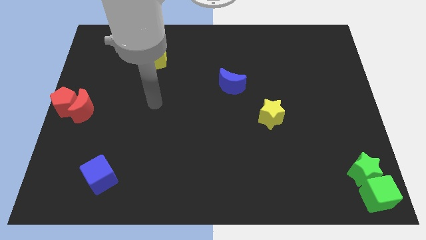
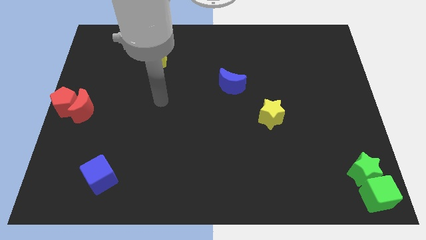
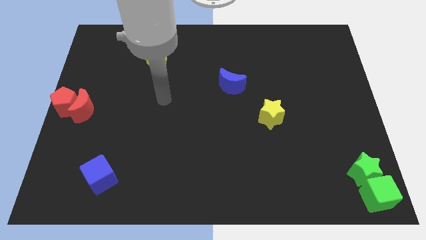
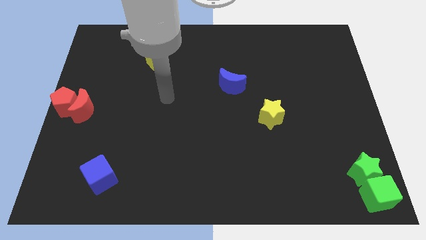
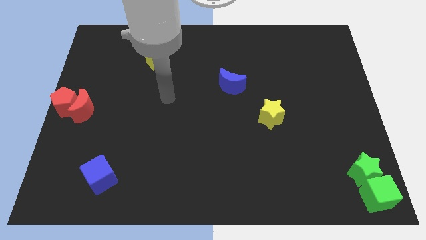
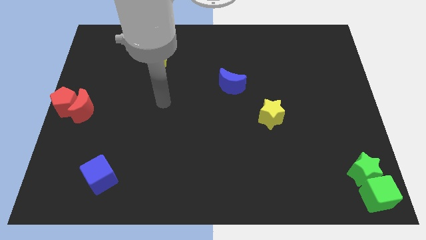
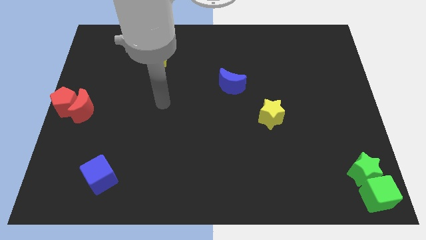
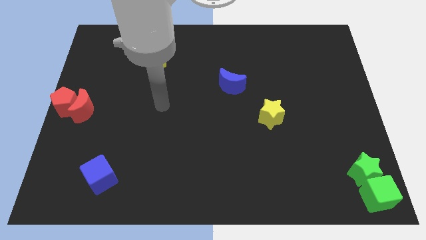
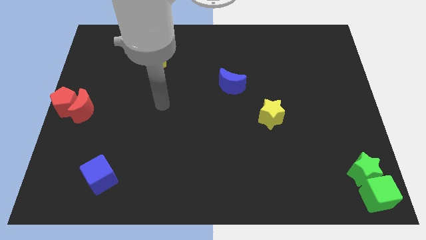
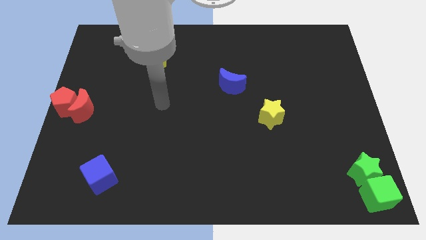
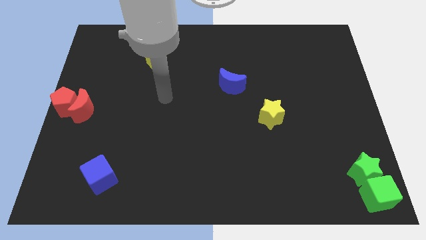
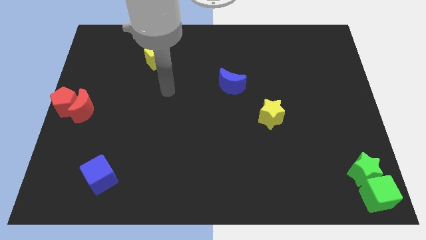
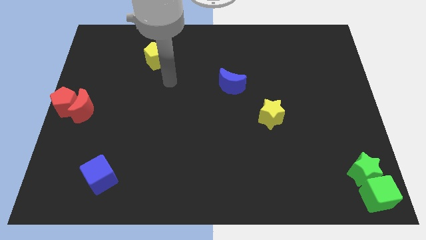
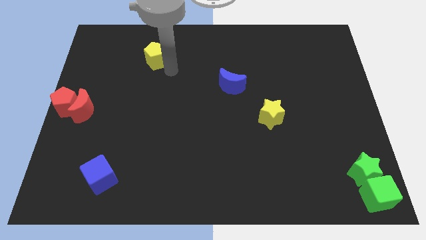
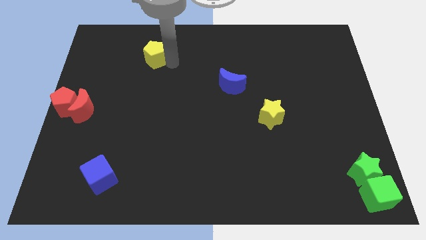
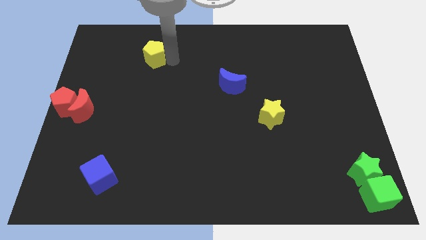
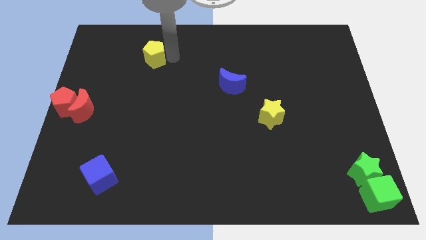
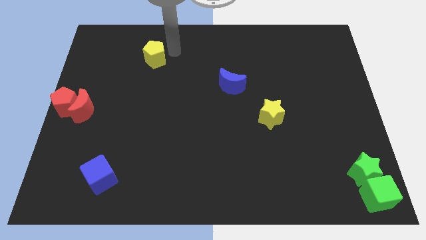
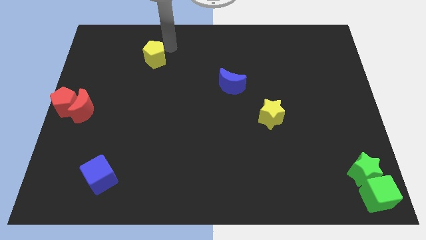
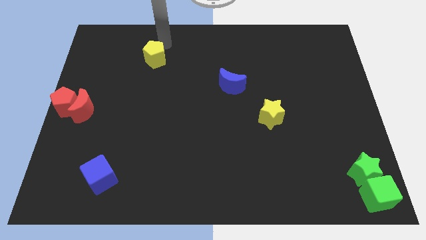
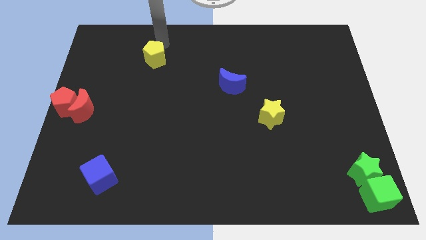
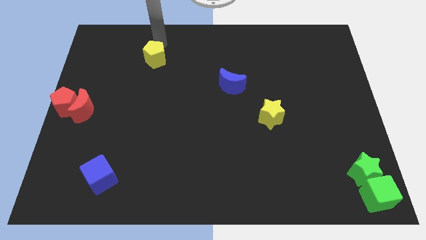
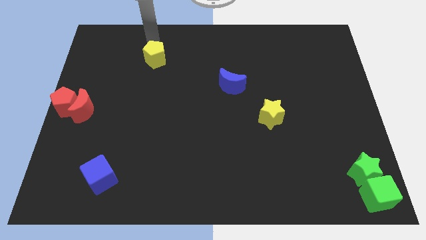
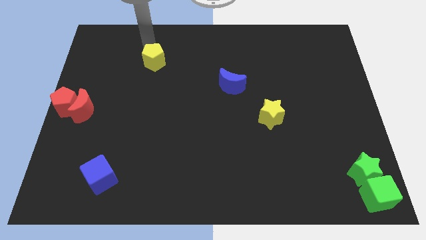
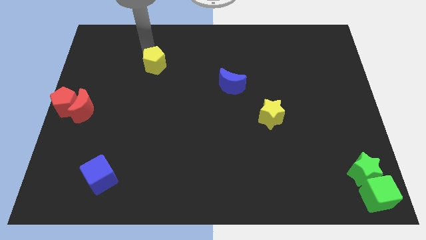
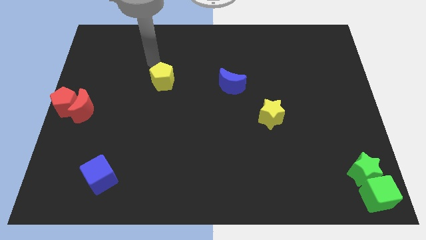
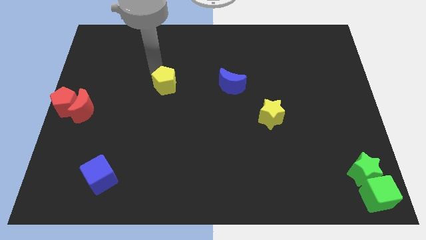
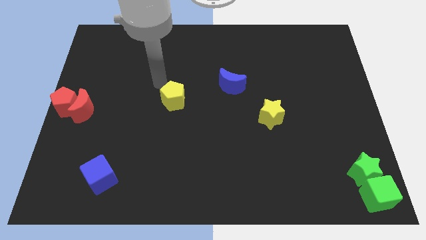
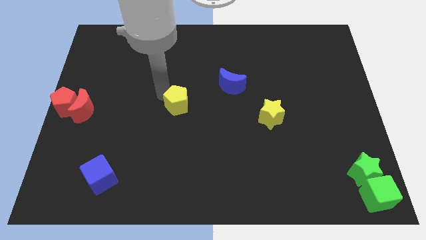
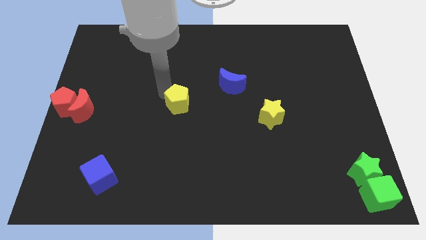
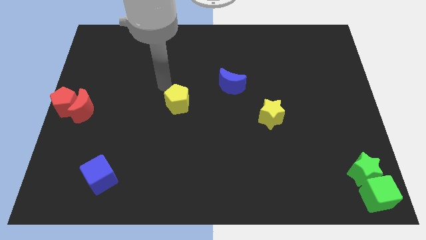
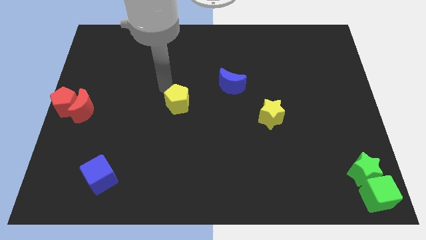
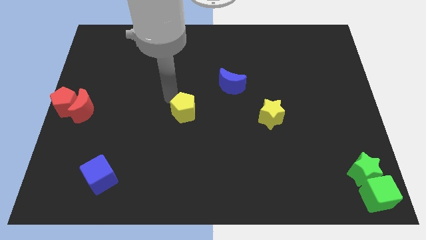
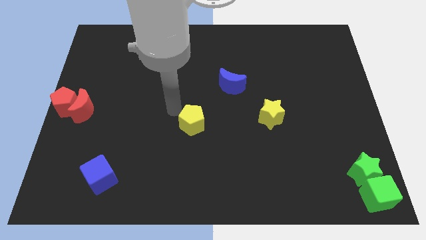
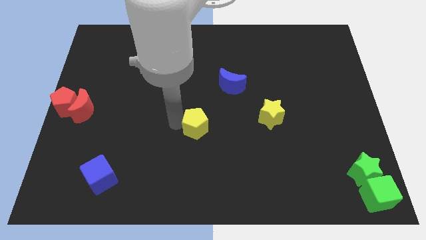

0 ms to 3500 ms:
place the yellow pentagon left to the yellow star

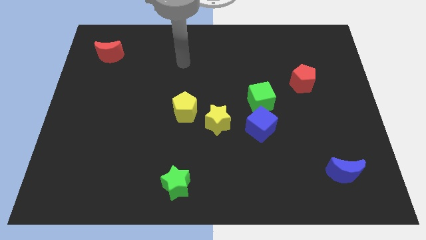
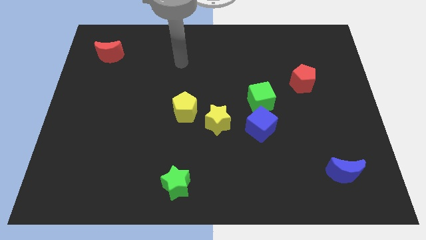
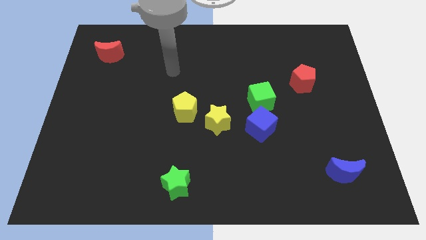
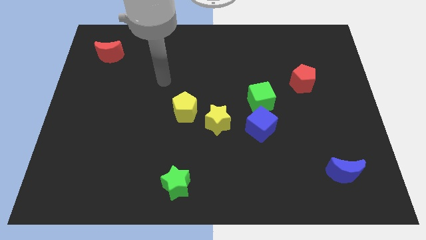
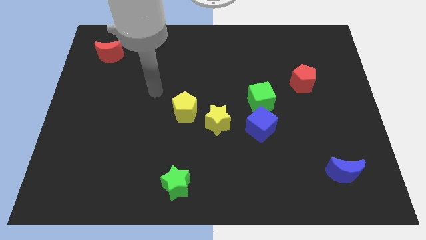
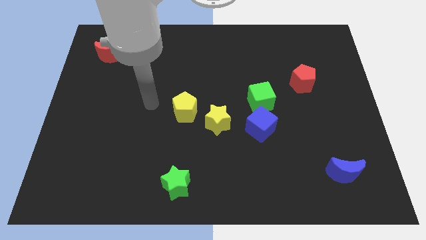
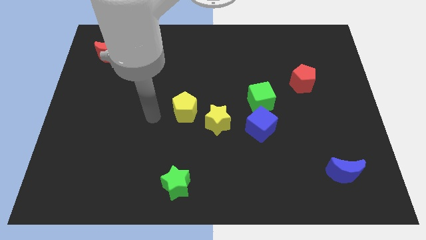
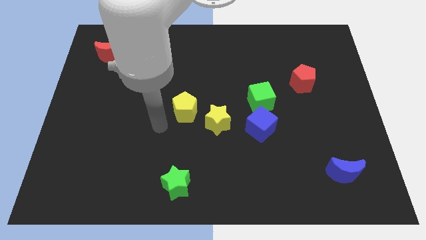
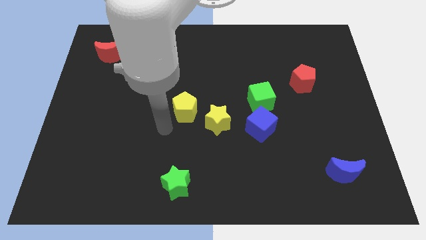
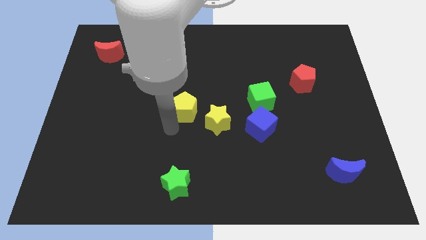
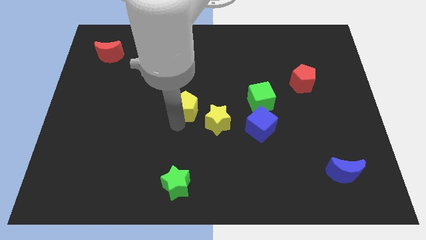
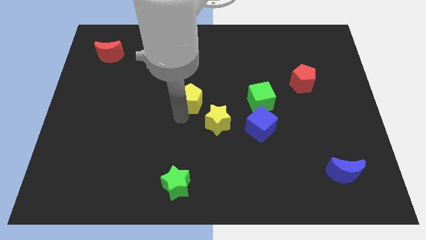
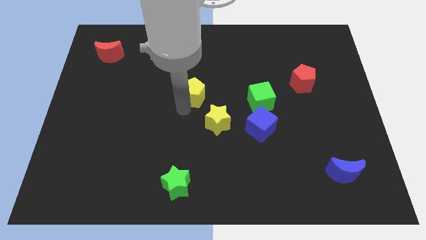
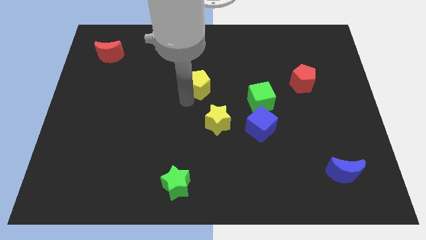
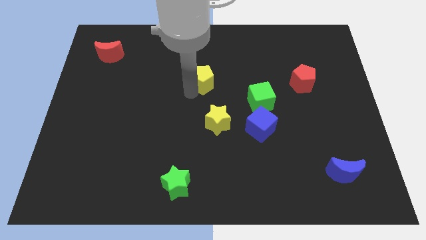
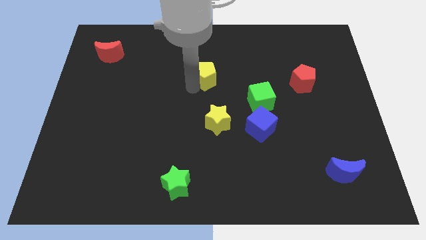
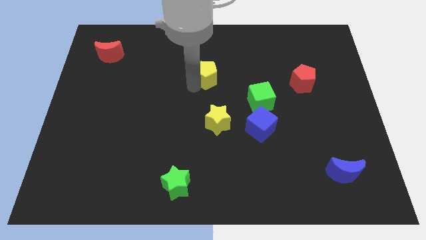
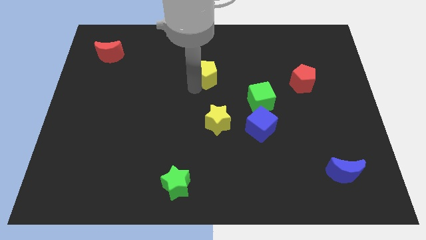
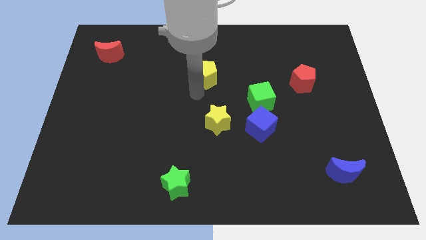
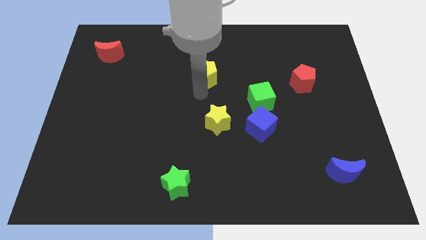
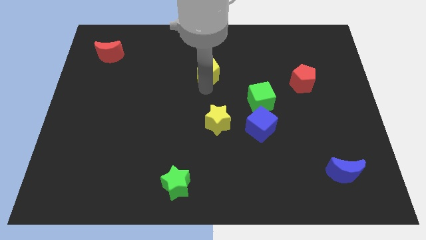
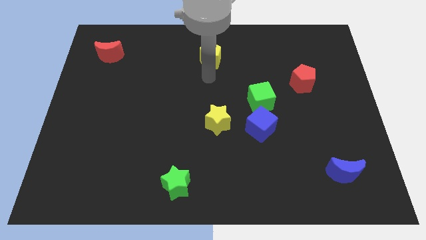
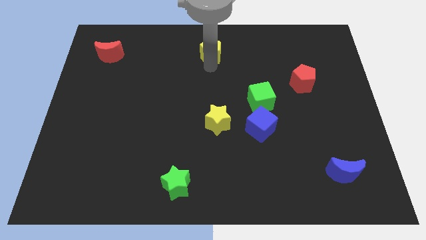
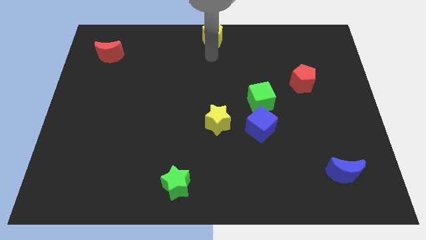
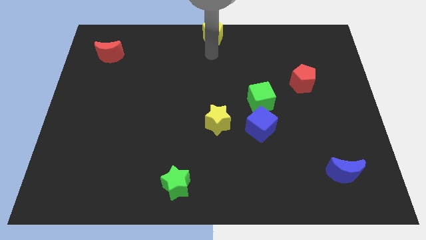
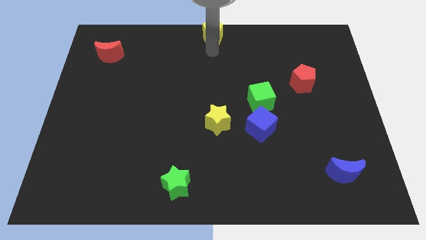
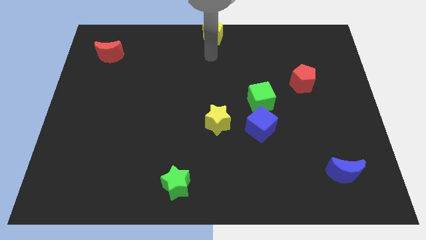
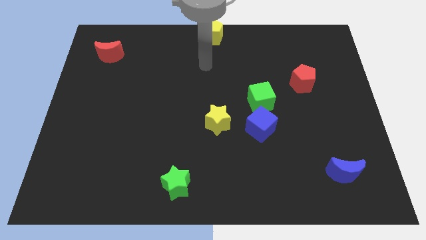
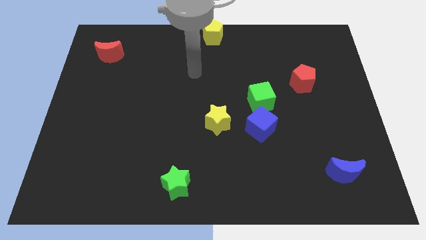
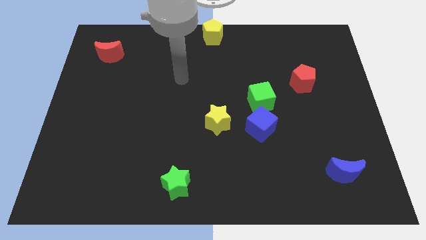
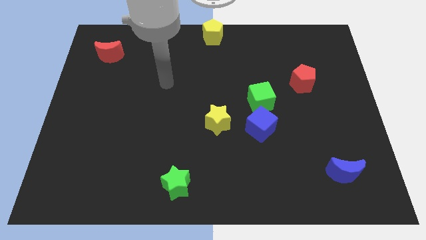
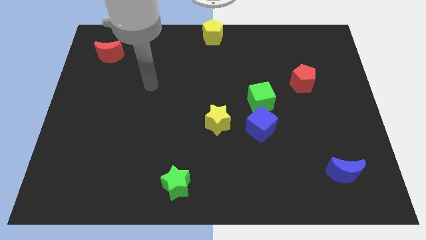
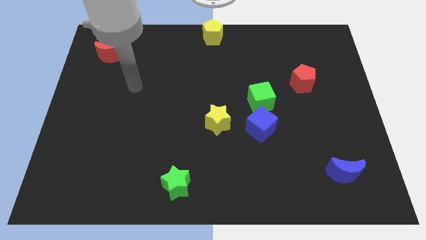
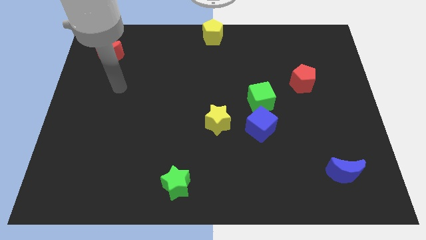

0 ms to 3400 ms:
put the yellow pentagon at the top center

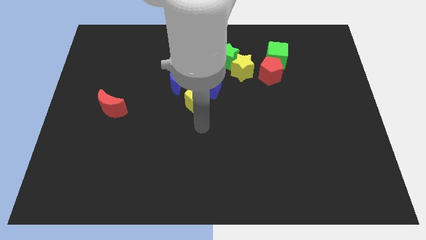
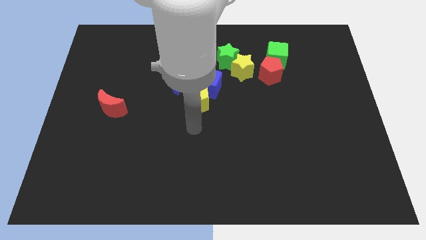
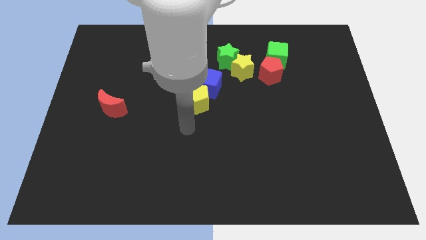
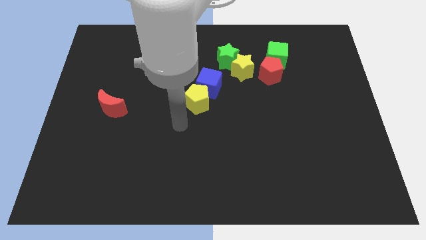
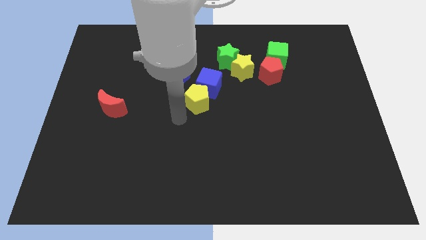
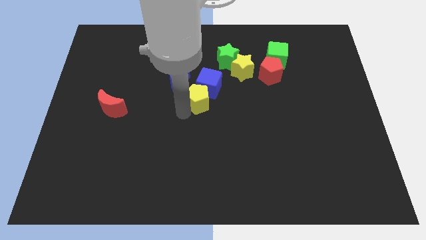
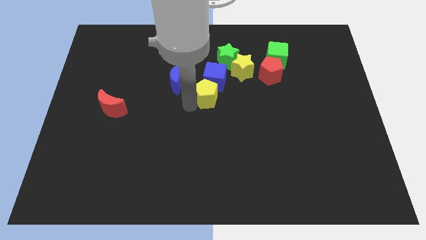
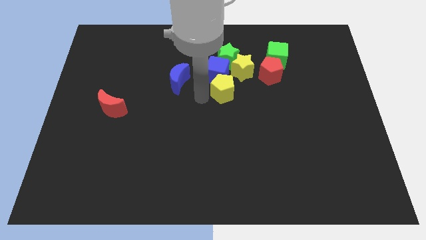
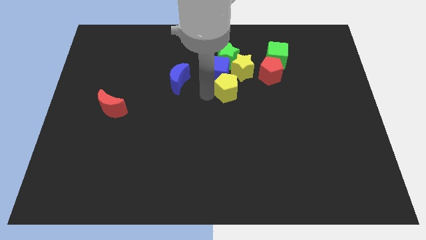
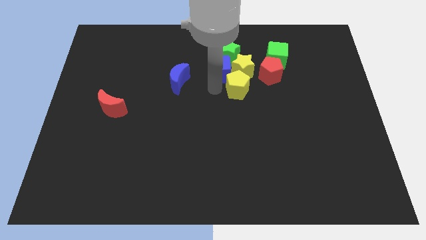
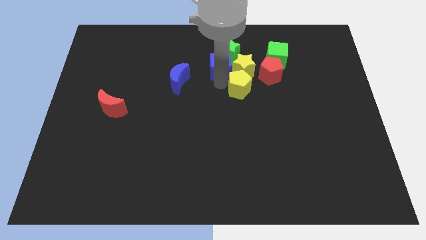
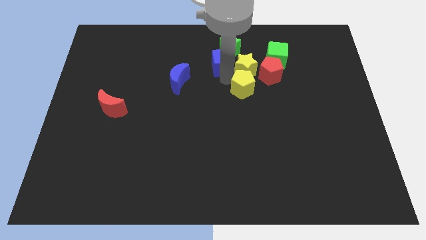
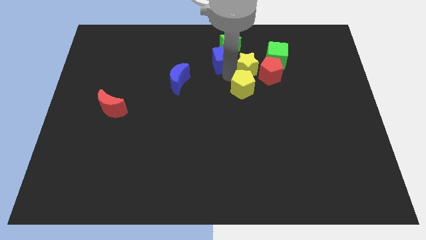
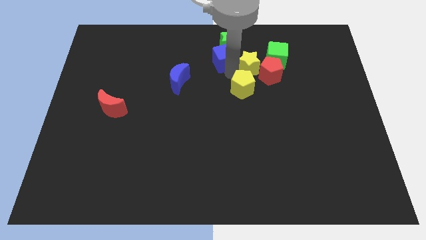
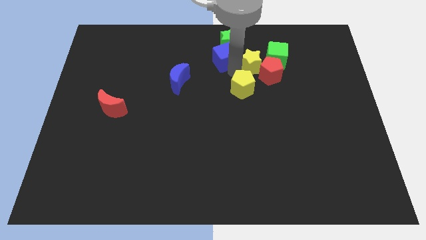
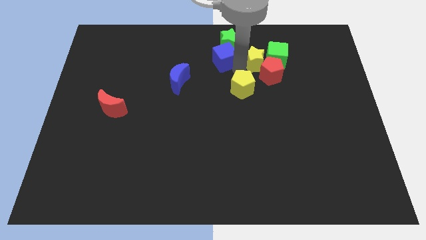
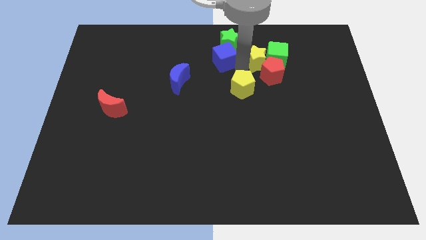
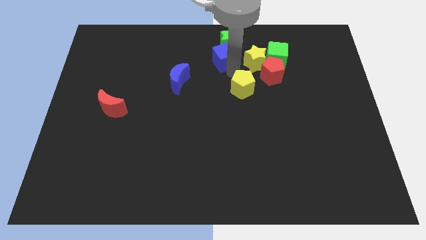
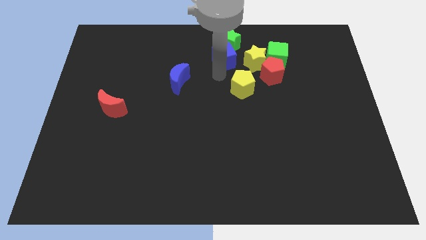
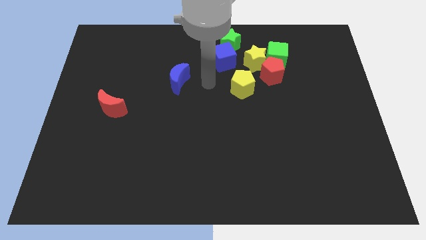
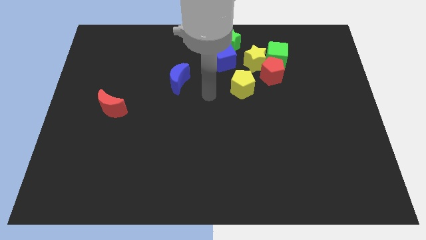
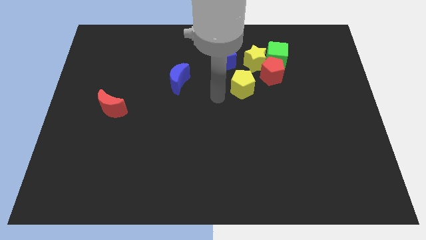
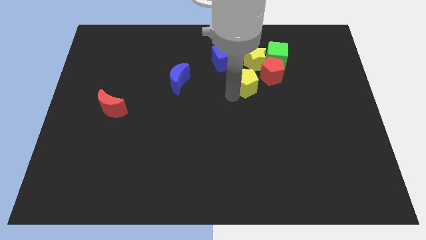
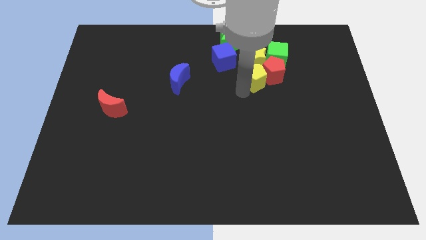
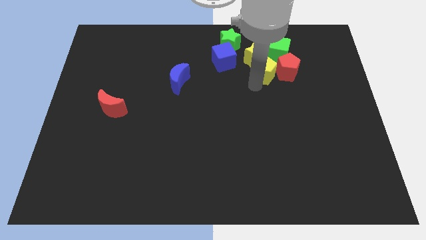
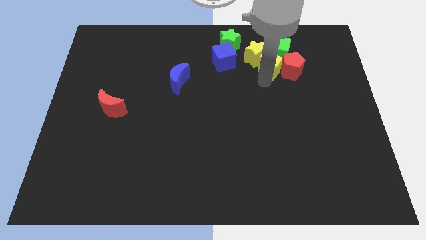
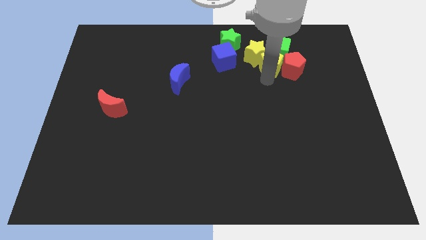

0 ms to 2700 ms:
move the yellow blocks to the green cube and red pentagon
